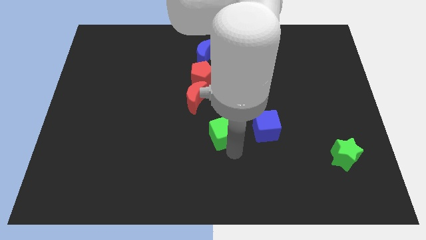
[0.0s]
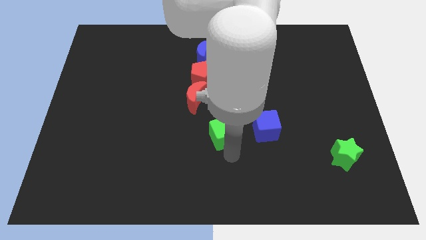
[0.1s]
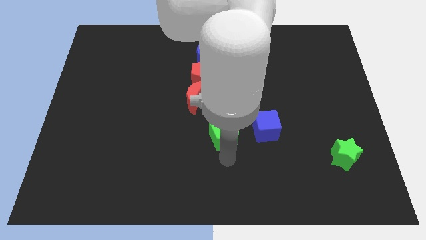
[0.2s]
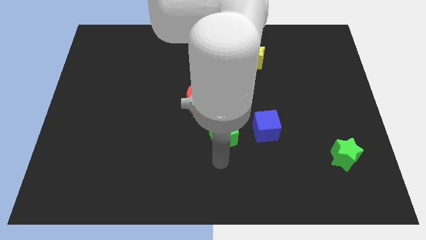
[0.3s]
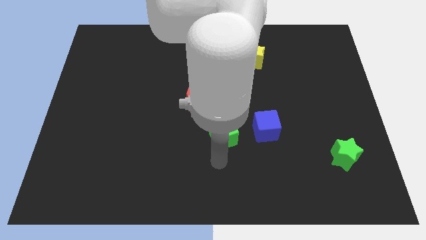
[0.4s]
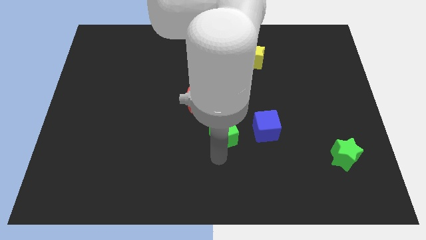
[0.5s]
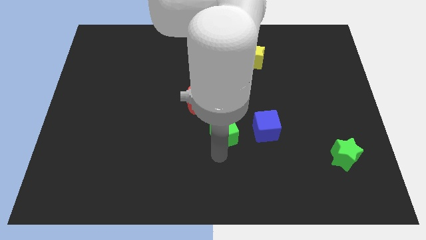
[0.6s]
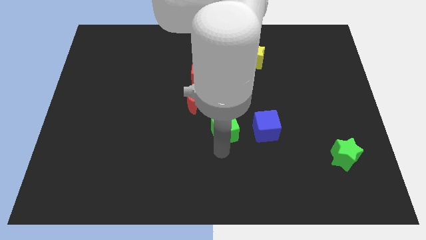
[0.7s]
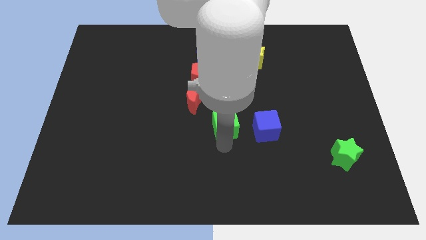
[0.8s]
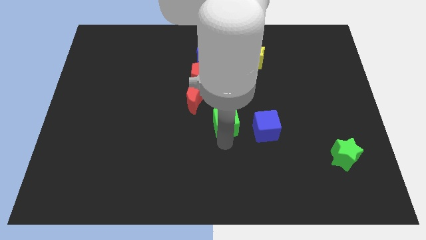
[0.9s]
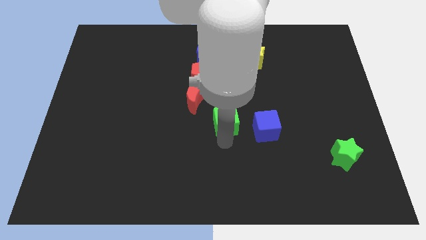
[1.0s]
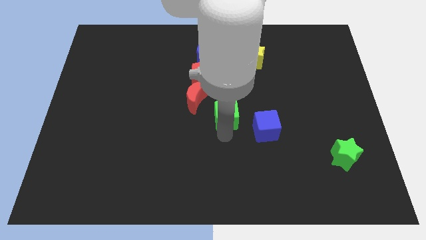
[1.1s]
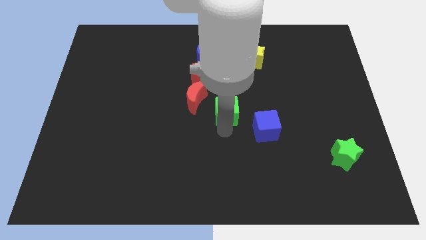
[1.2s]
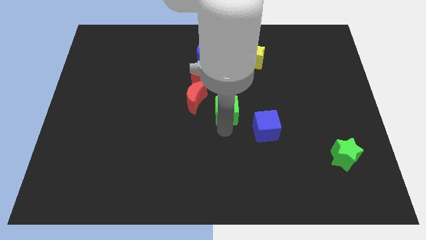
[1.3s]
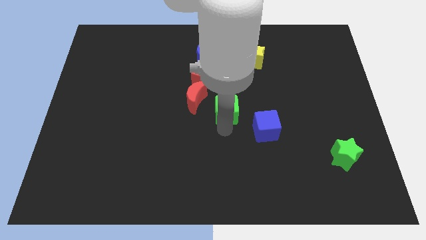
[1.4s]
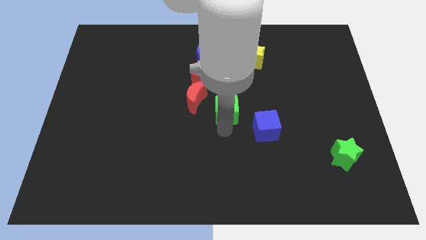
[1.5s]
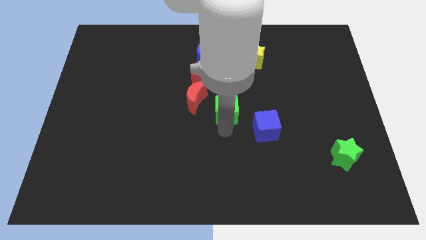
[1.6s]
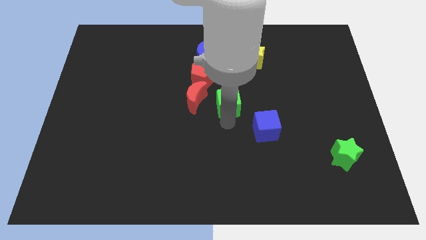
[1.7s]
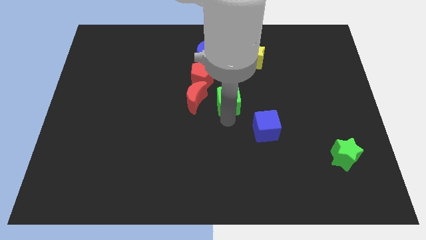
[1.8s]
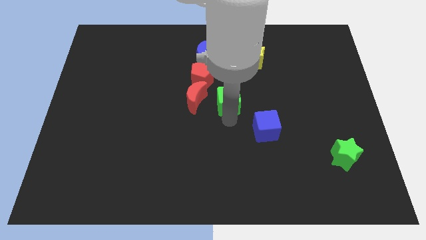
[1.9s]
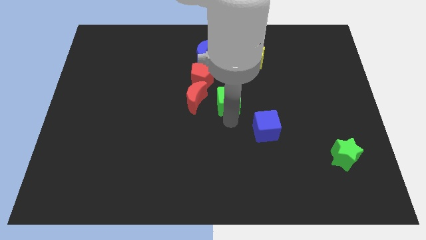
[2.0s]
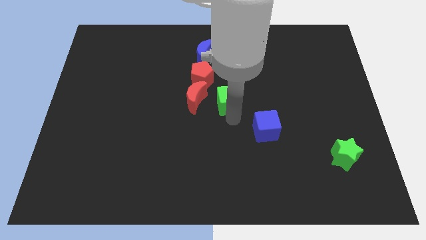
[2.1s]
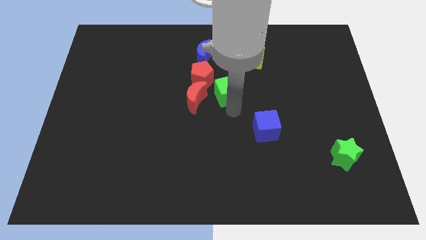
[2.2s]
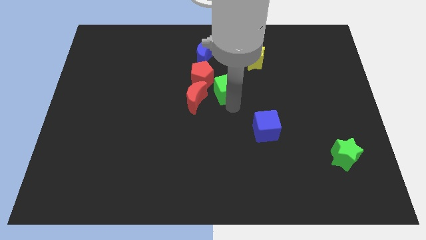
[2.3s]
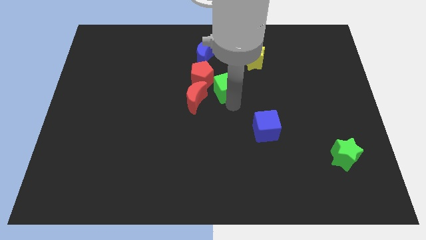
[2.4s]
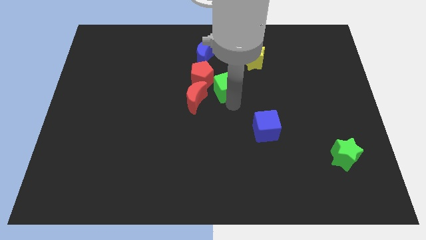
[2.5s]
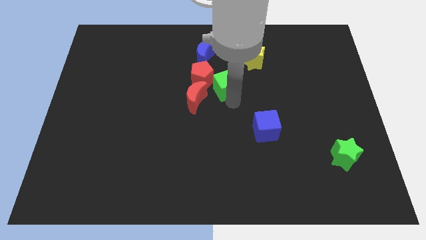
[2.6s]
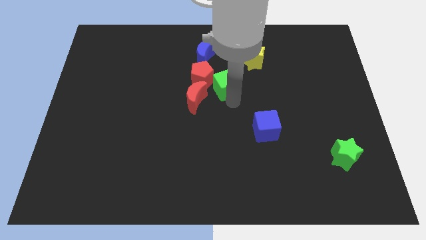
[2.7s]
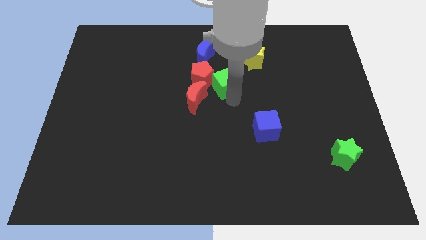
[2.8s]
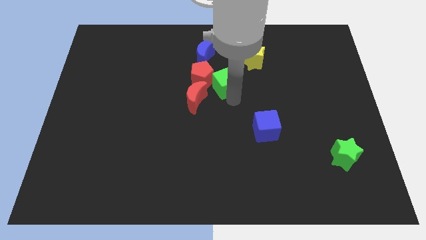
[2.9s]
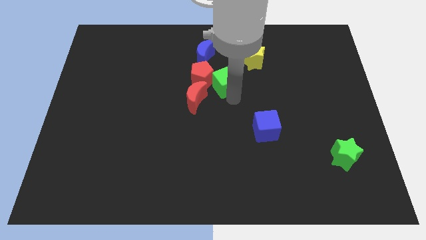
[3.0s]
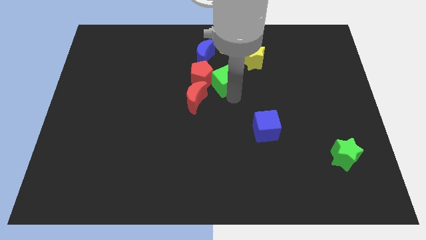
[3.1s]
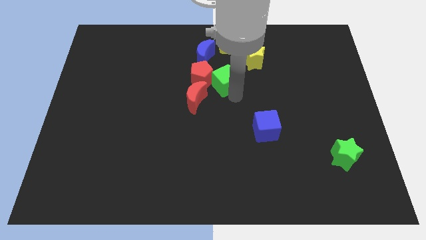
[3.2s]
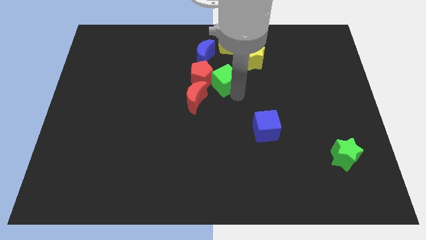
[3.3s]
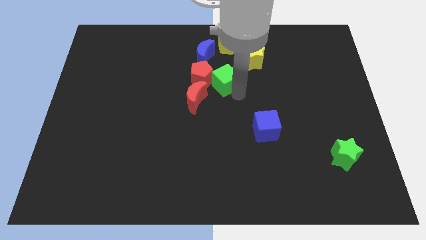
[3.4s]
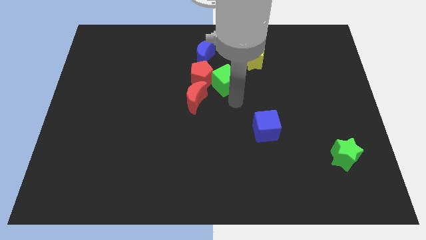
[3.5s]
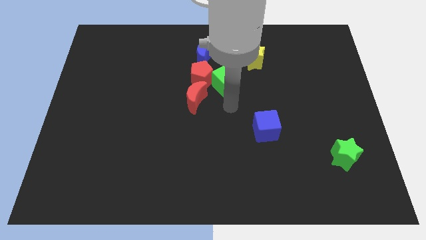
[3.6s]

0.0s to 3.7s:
move the green square at the right side of red pentagon

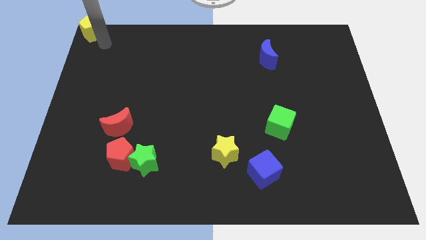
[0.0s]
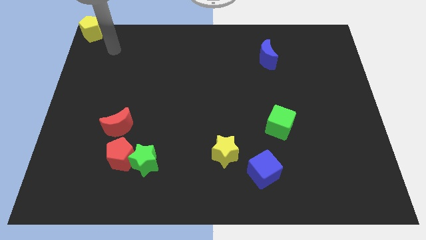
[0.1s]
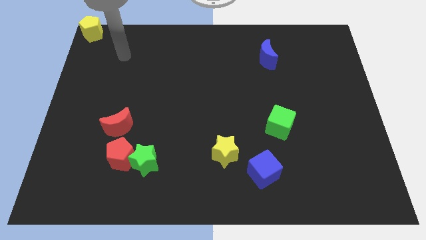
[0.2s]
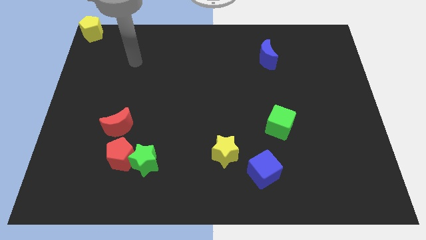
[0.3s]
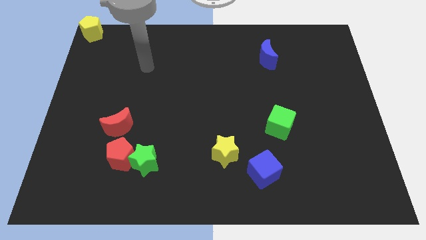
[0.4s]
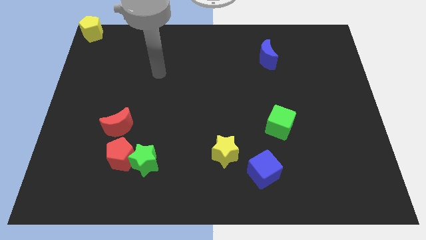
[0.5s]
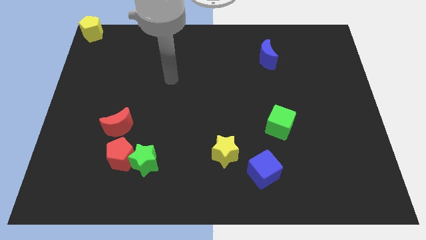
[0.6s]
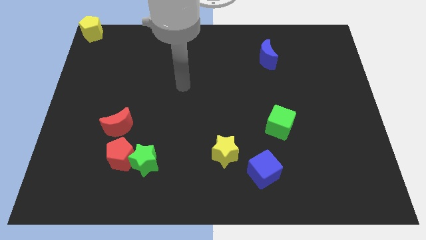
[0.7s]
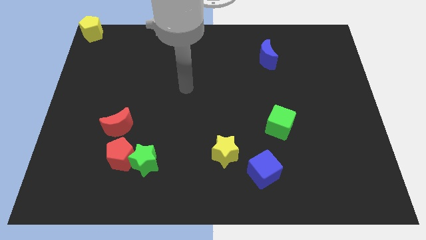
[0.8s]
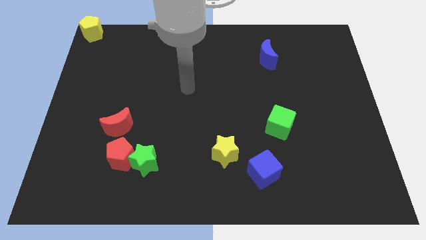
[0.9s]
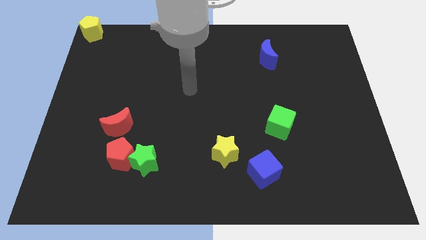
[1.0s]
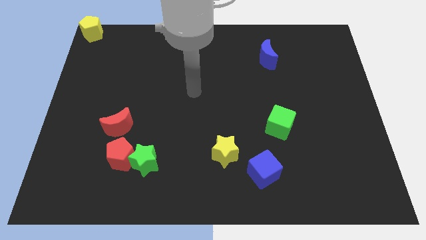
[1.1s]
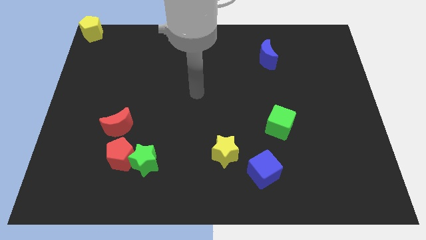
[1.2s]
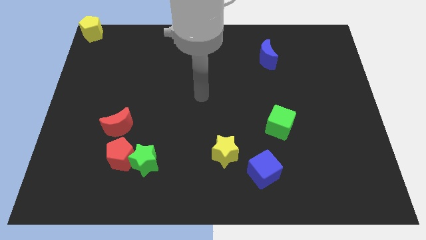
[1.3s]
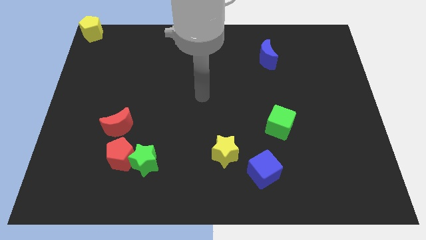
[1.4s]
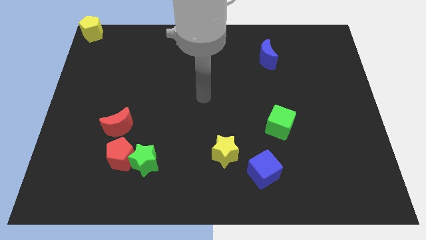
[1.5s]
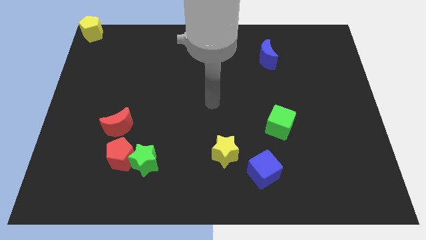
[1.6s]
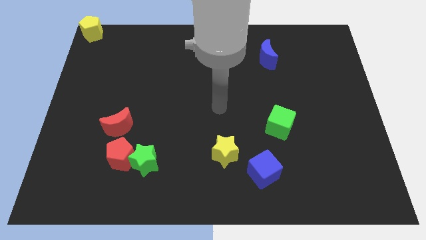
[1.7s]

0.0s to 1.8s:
move your arm away from the yellow pentagon

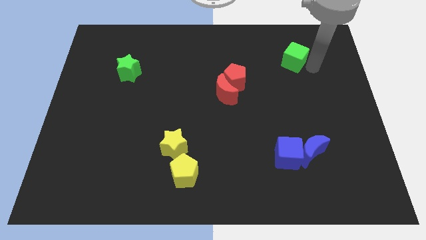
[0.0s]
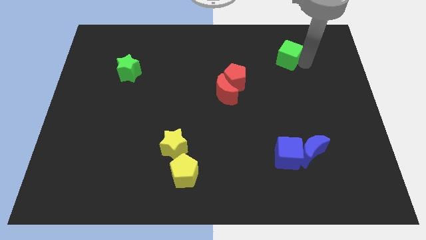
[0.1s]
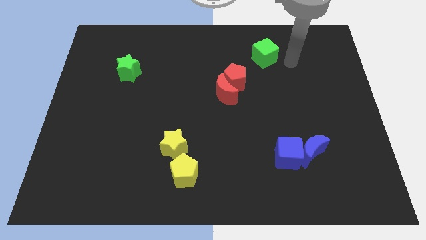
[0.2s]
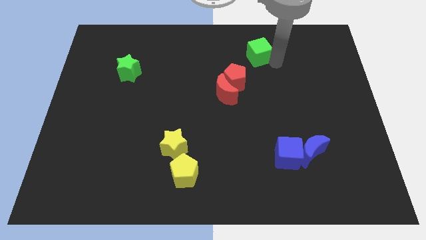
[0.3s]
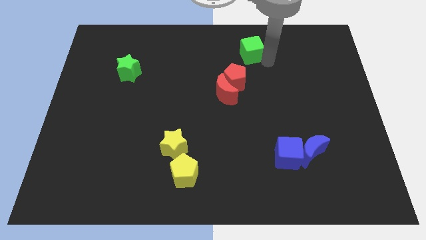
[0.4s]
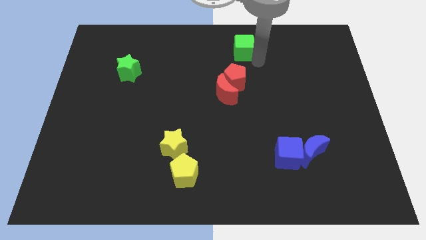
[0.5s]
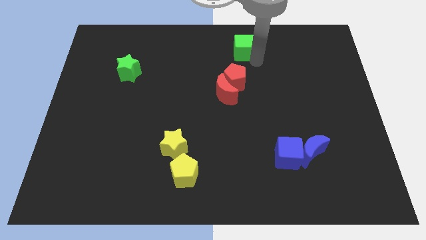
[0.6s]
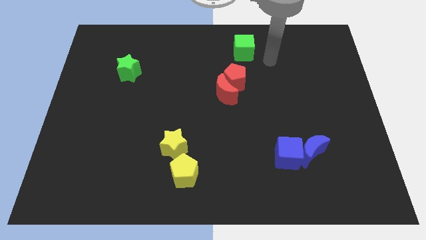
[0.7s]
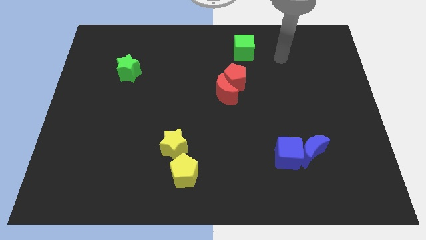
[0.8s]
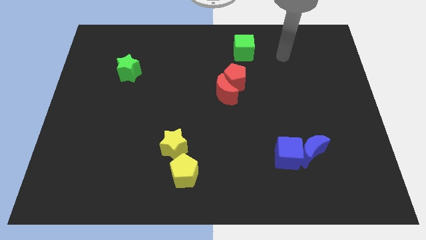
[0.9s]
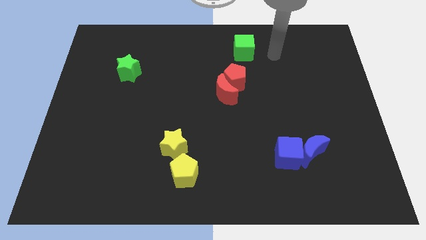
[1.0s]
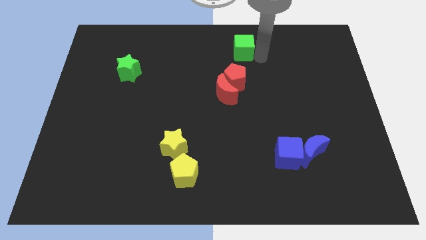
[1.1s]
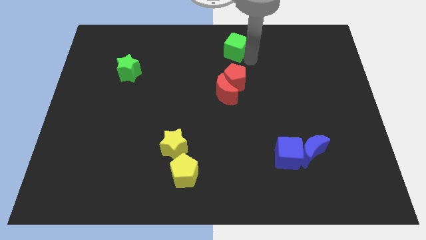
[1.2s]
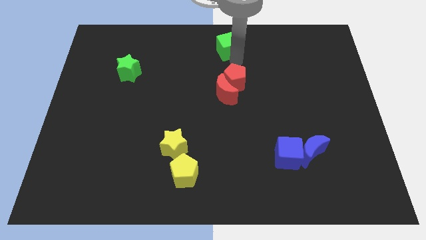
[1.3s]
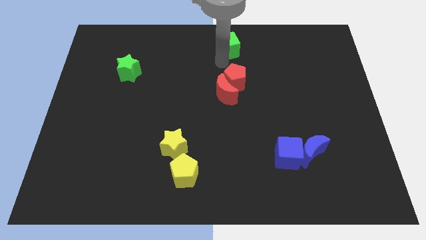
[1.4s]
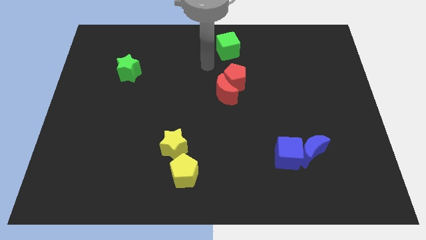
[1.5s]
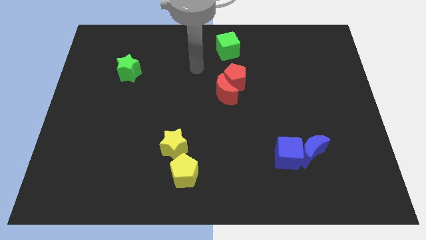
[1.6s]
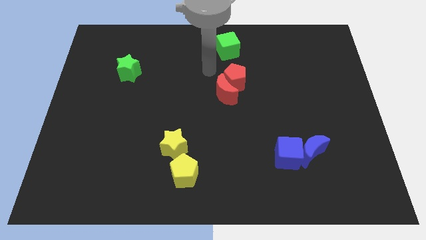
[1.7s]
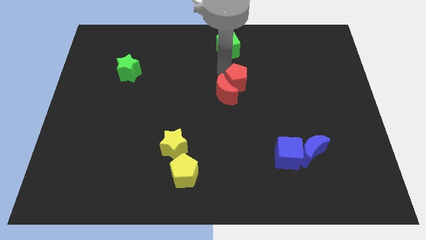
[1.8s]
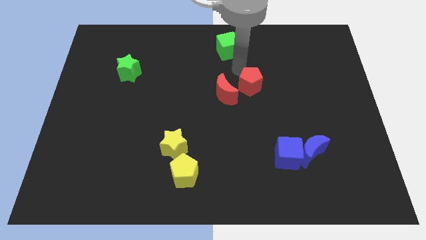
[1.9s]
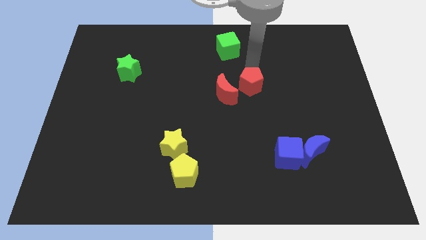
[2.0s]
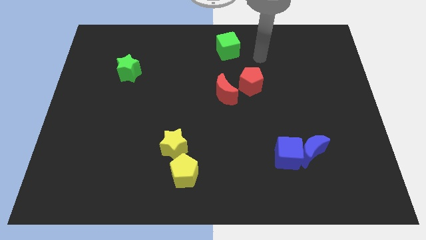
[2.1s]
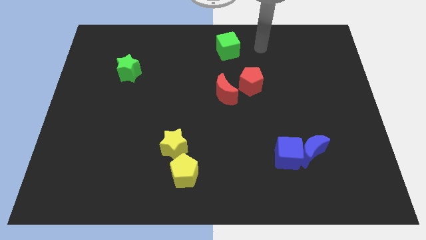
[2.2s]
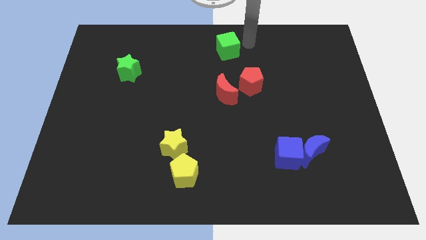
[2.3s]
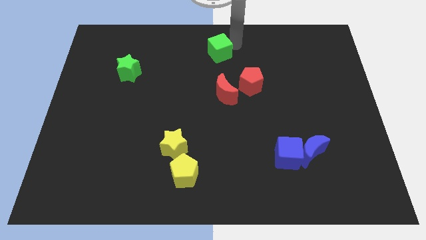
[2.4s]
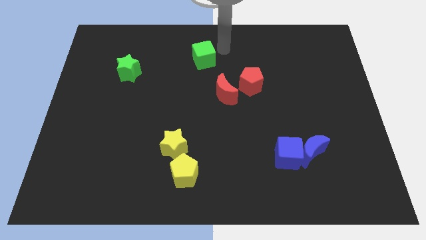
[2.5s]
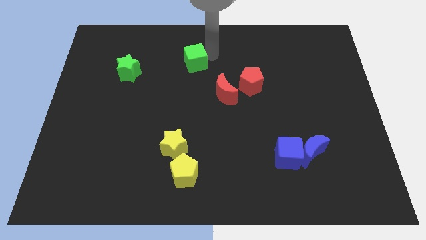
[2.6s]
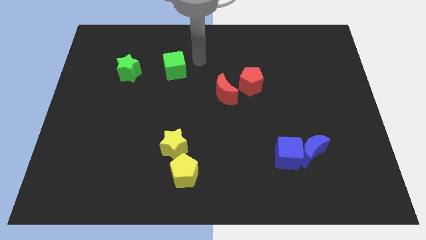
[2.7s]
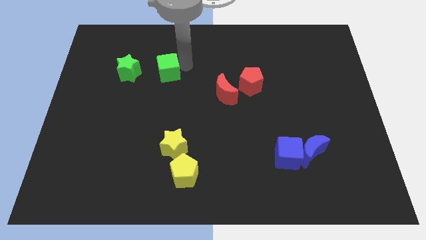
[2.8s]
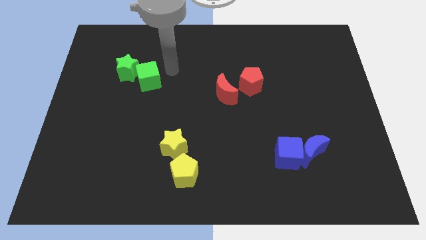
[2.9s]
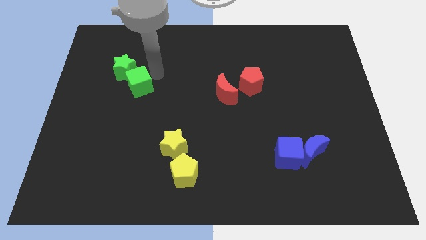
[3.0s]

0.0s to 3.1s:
push the green cube to the right of the green star

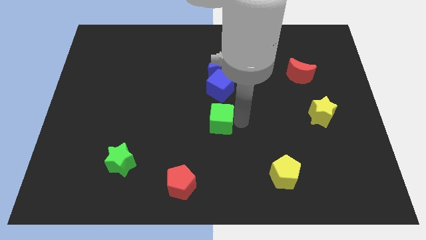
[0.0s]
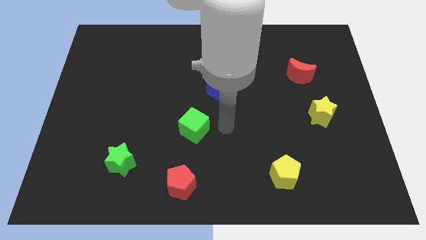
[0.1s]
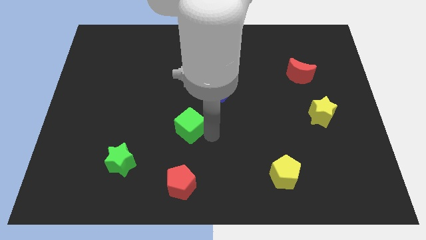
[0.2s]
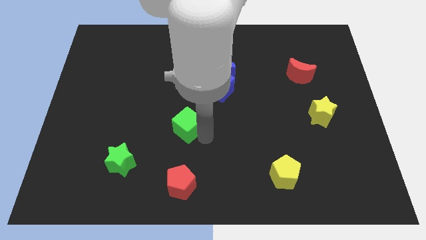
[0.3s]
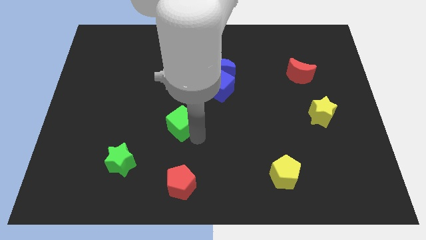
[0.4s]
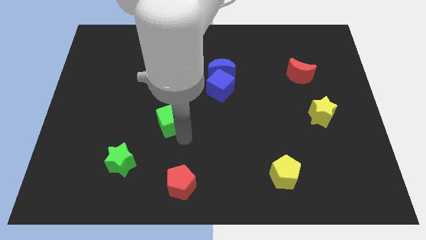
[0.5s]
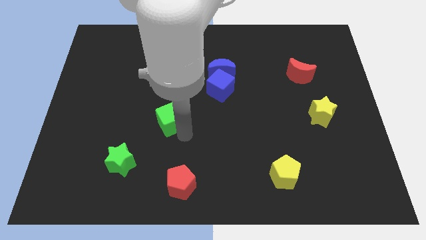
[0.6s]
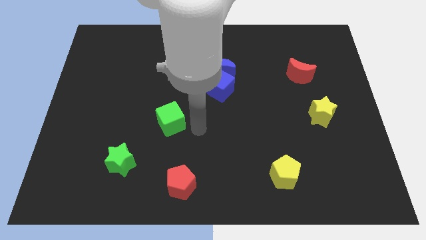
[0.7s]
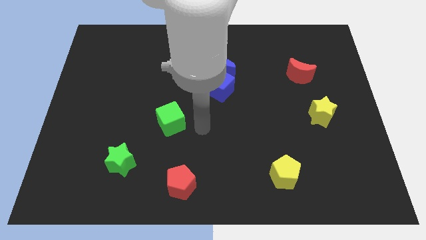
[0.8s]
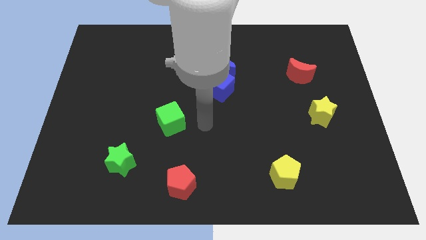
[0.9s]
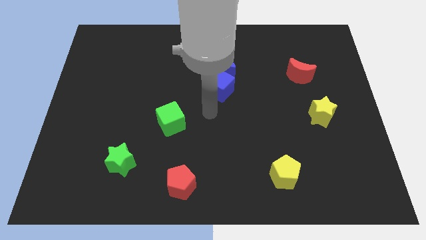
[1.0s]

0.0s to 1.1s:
move the green cube above the red pentagon
